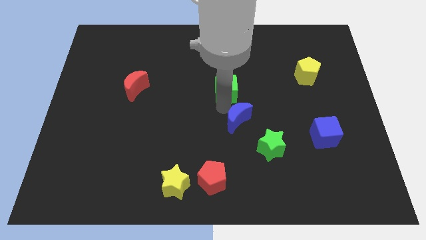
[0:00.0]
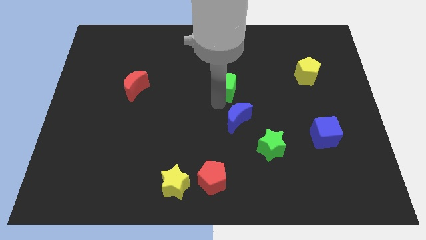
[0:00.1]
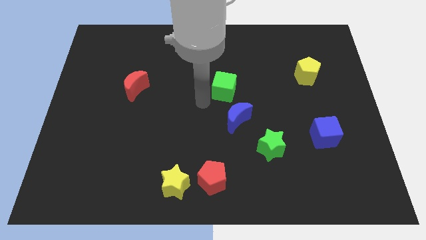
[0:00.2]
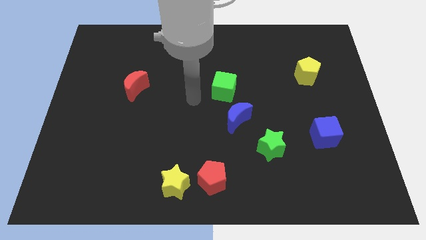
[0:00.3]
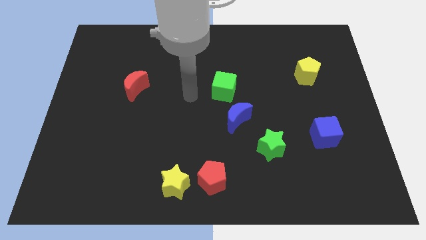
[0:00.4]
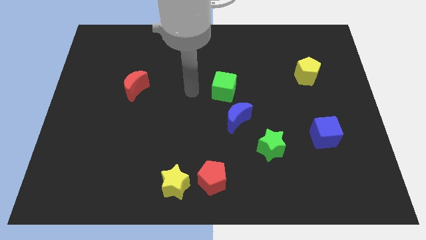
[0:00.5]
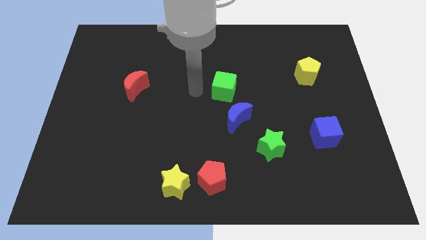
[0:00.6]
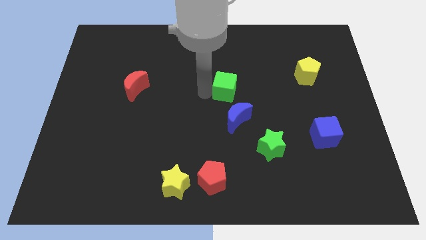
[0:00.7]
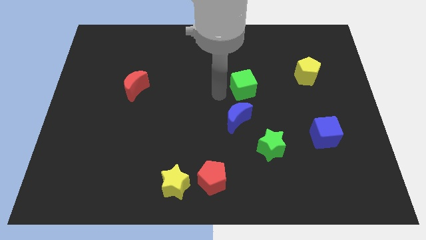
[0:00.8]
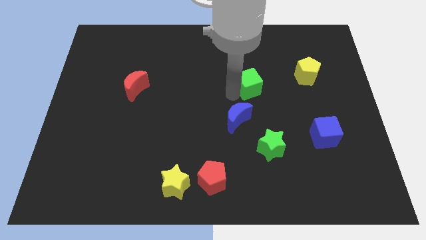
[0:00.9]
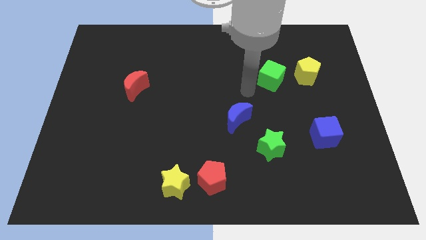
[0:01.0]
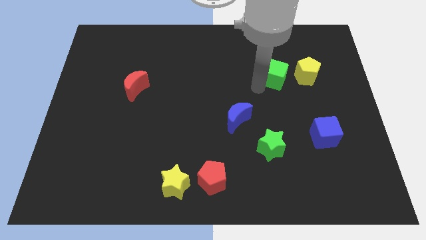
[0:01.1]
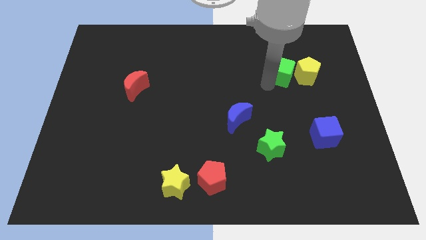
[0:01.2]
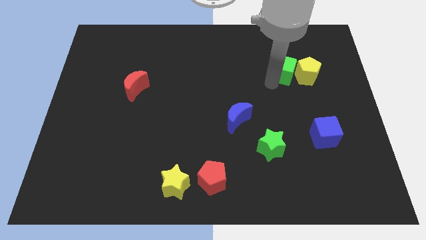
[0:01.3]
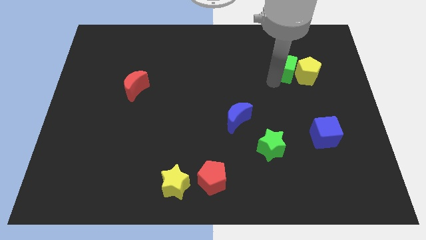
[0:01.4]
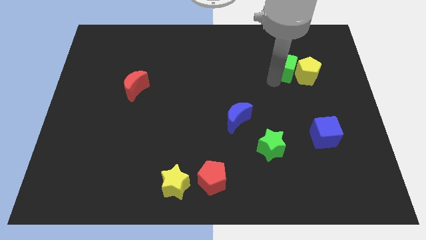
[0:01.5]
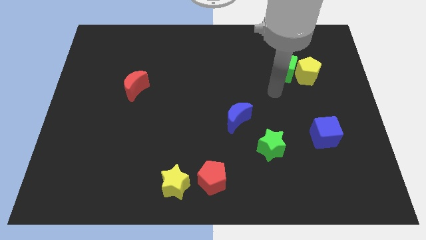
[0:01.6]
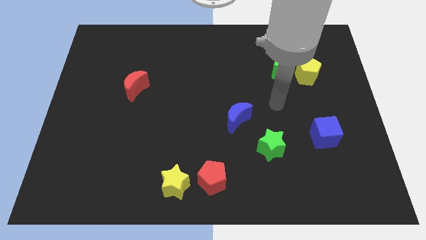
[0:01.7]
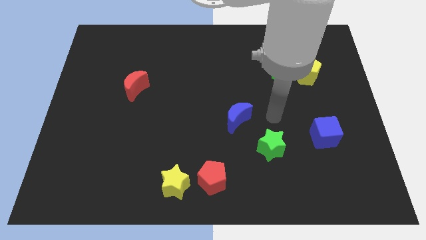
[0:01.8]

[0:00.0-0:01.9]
place the green cube to the left of yellow pentagon

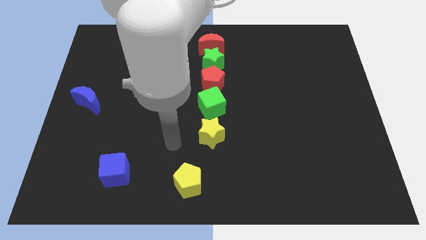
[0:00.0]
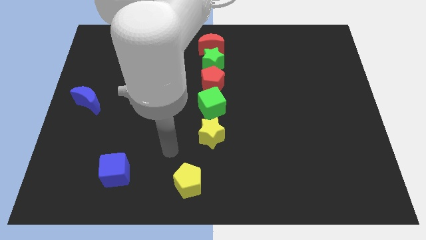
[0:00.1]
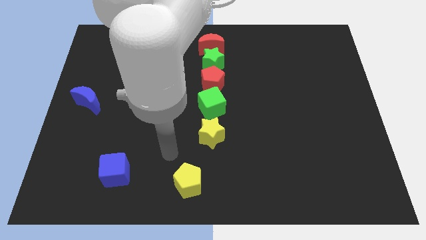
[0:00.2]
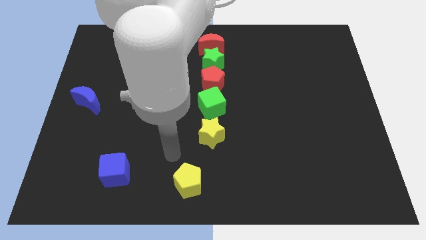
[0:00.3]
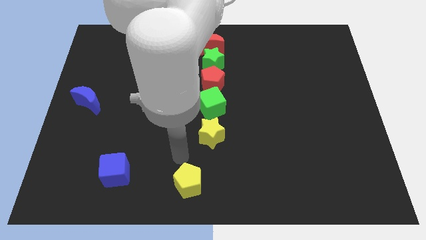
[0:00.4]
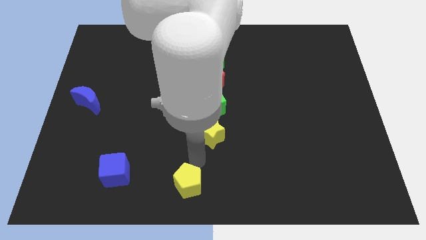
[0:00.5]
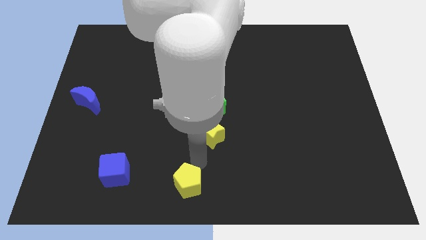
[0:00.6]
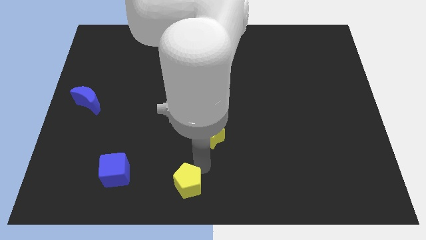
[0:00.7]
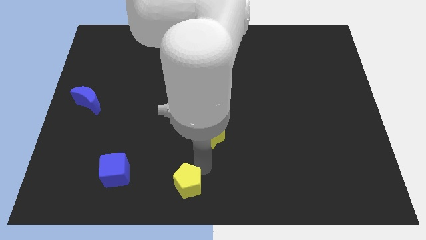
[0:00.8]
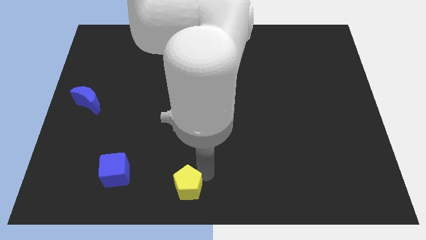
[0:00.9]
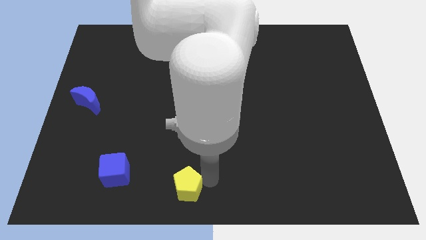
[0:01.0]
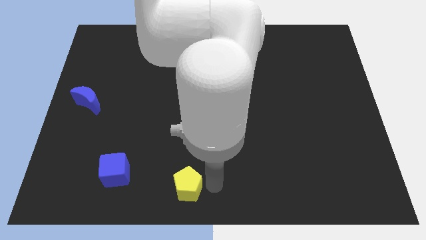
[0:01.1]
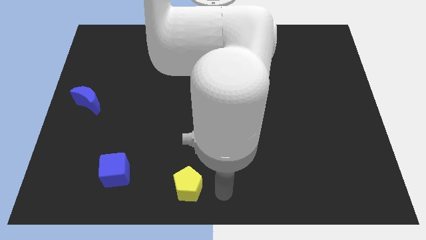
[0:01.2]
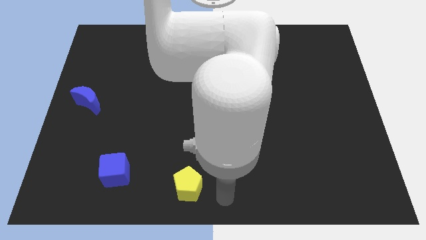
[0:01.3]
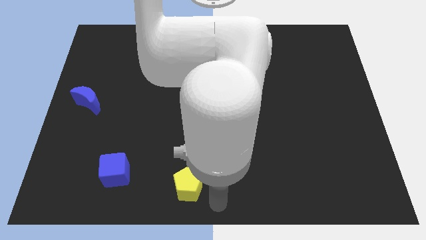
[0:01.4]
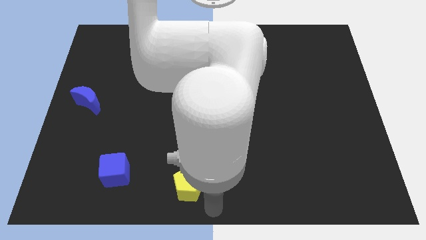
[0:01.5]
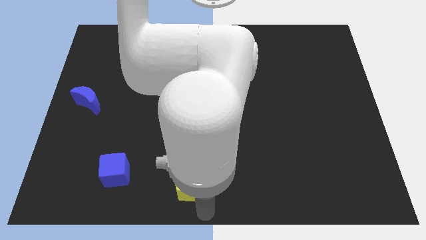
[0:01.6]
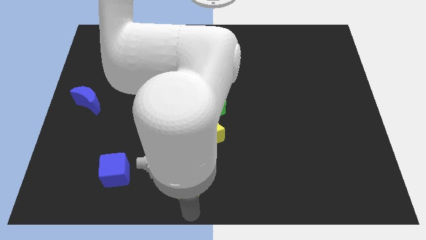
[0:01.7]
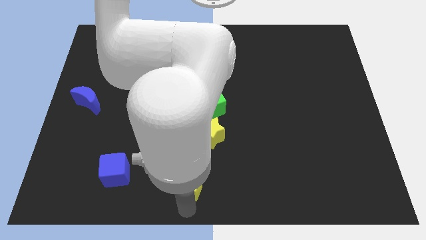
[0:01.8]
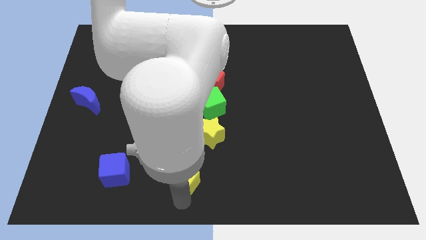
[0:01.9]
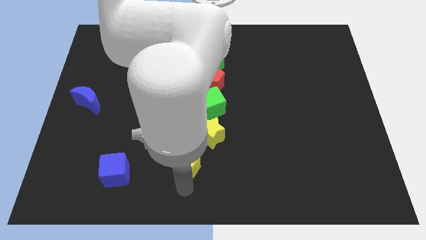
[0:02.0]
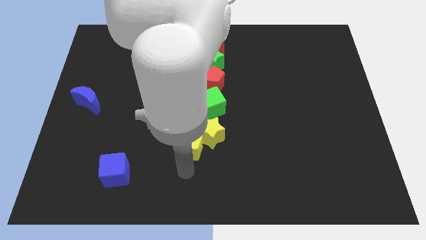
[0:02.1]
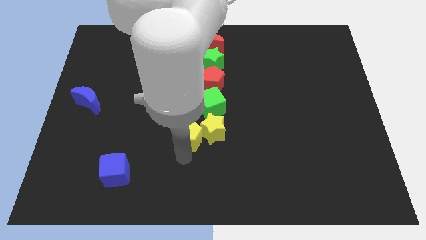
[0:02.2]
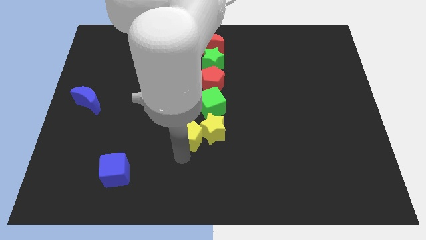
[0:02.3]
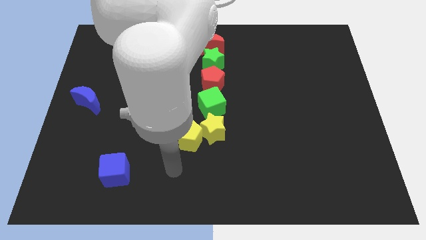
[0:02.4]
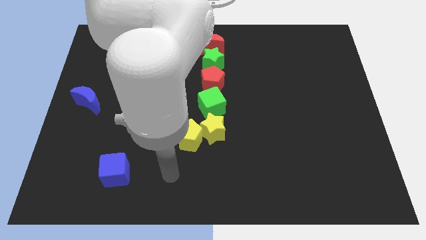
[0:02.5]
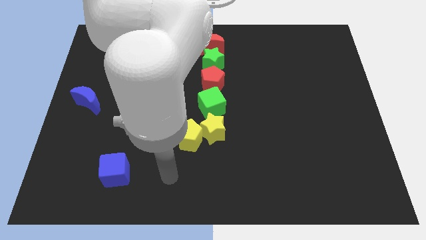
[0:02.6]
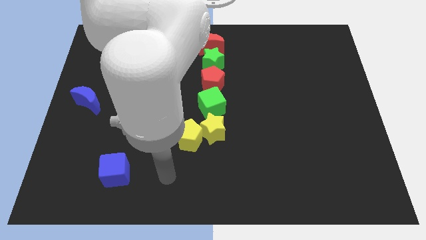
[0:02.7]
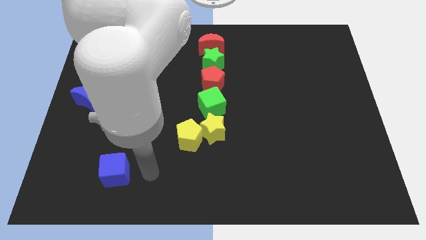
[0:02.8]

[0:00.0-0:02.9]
push the yellow pentagon into yellow star

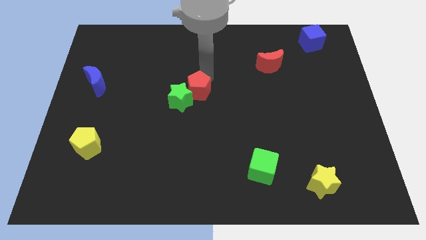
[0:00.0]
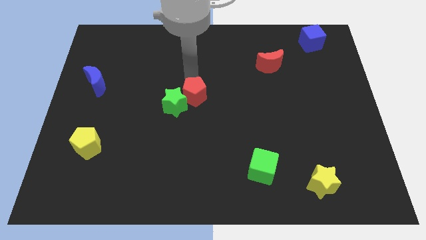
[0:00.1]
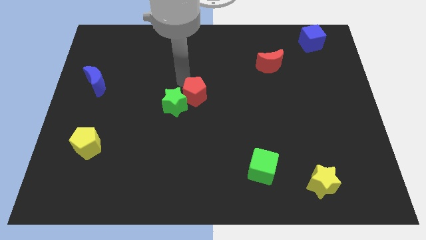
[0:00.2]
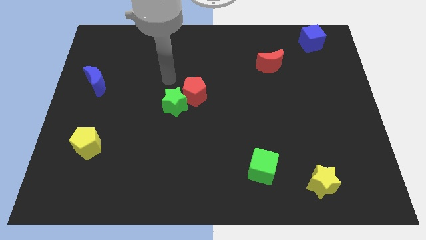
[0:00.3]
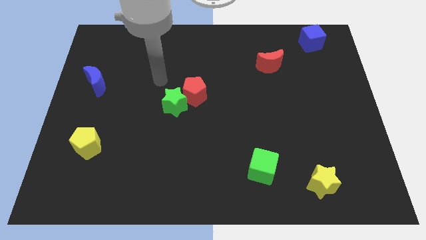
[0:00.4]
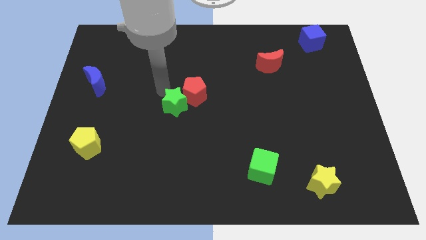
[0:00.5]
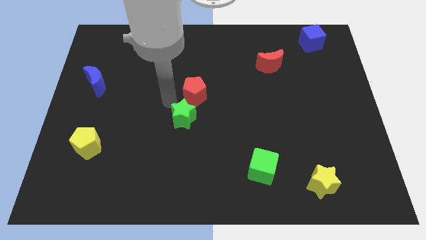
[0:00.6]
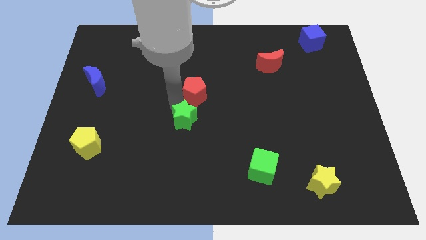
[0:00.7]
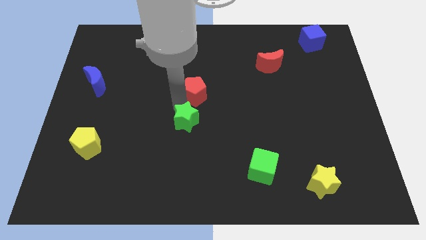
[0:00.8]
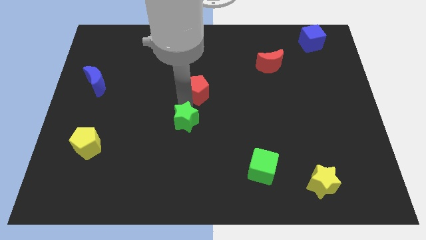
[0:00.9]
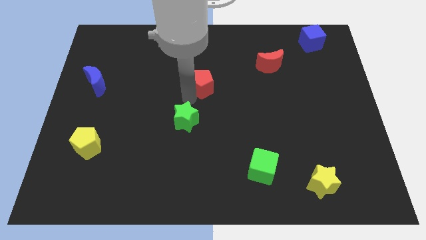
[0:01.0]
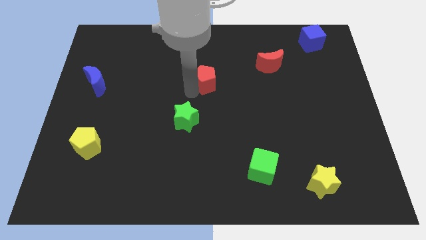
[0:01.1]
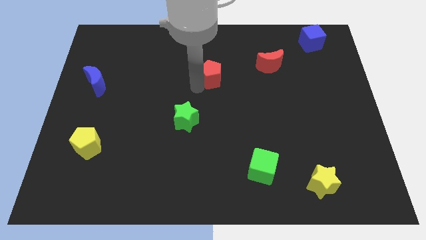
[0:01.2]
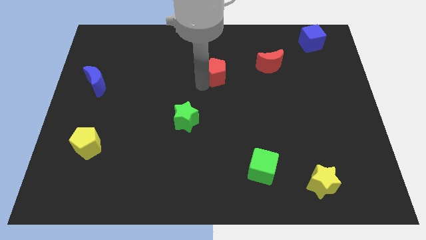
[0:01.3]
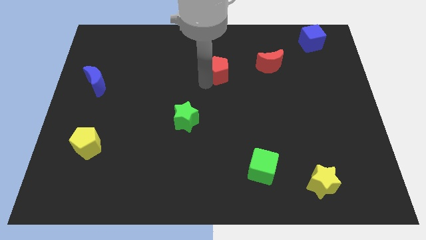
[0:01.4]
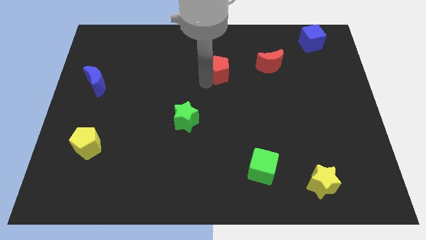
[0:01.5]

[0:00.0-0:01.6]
separate the red pentagon from the green star

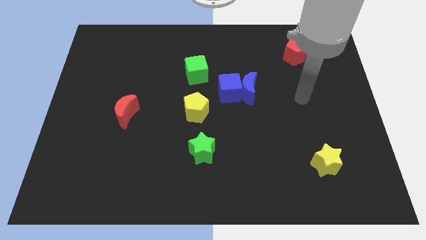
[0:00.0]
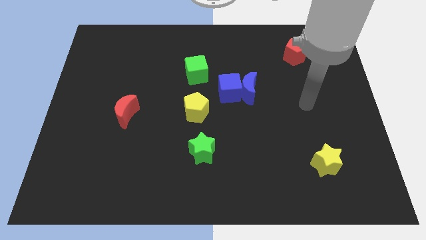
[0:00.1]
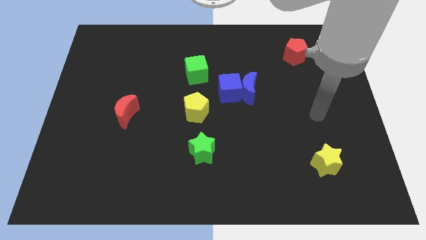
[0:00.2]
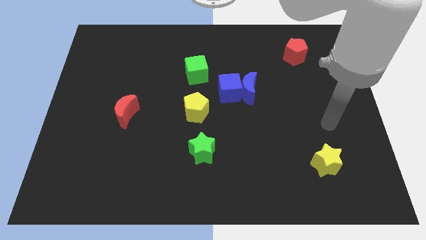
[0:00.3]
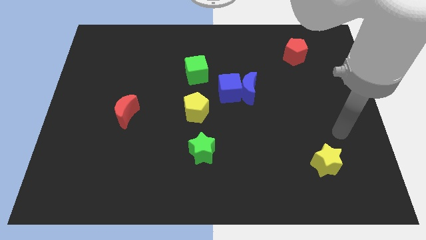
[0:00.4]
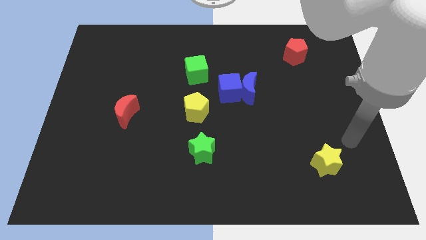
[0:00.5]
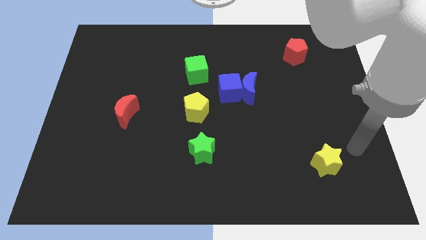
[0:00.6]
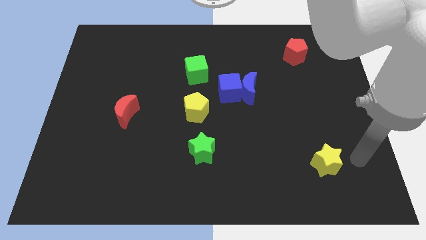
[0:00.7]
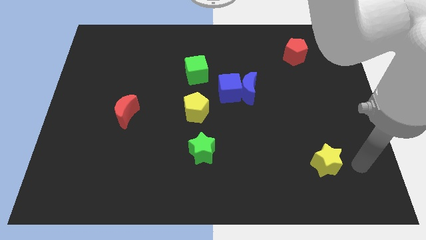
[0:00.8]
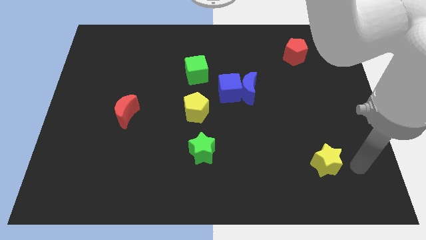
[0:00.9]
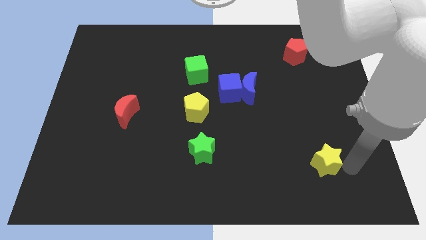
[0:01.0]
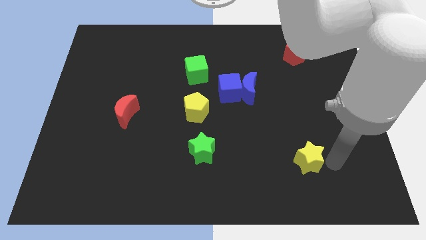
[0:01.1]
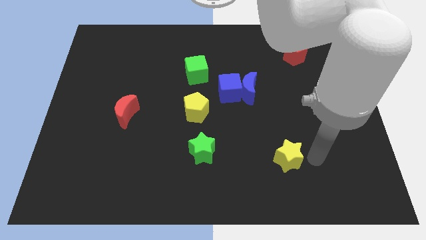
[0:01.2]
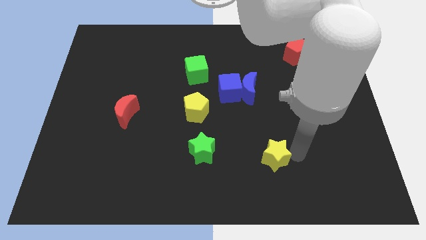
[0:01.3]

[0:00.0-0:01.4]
push the yellow star towards the green star

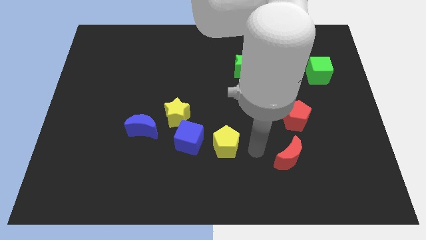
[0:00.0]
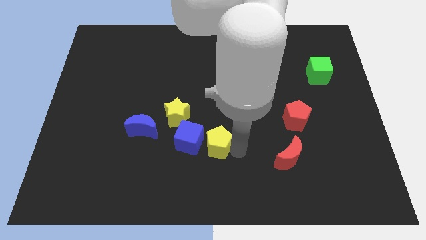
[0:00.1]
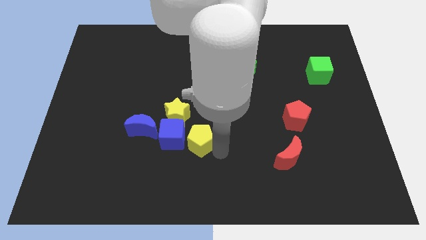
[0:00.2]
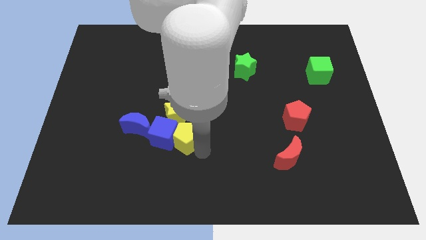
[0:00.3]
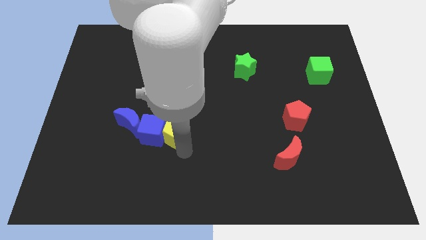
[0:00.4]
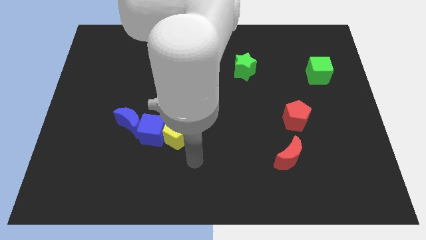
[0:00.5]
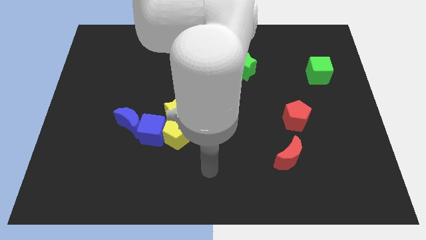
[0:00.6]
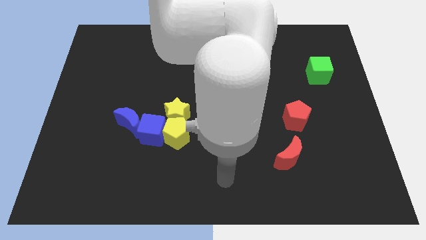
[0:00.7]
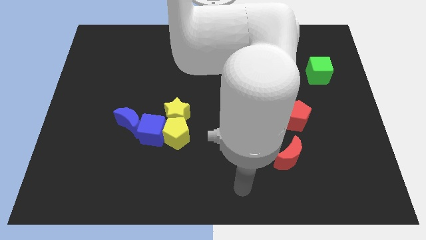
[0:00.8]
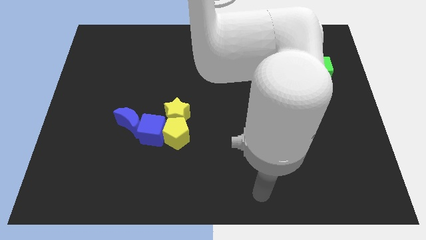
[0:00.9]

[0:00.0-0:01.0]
push the yellow pentagon into the blue cube

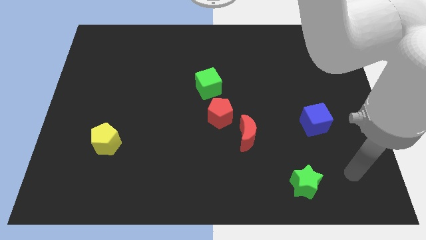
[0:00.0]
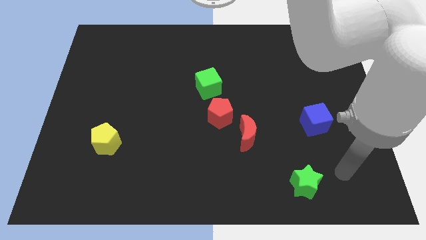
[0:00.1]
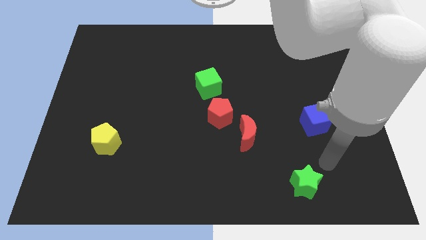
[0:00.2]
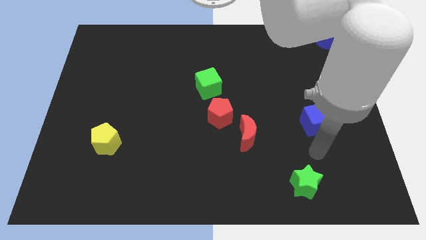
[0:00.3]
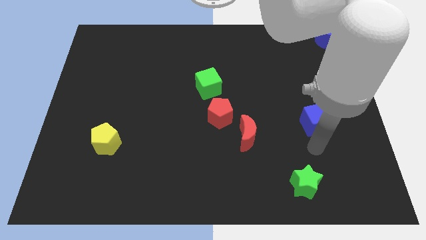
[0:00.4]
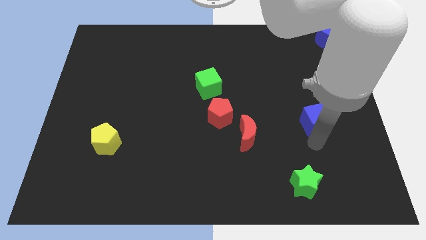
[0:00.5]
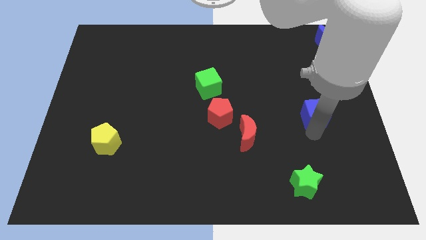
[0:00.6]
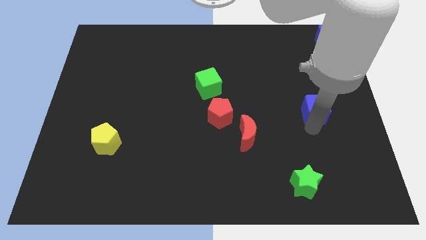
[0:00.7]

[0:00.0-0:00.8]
move your arm to the bottom of the blue cube
